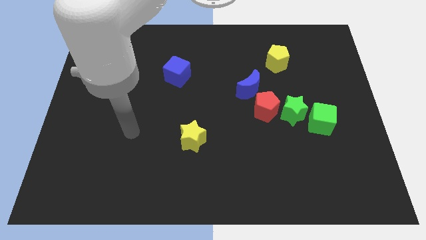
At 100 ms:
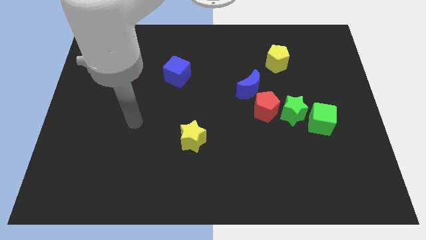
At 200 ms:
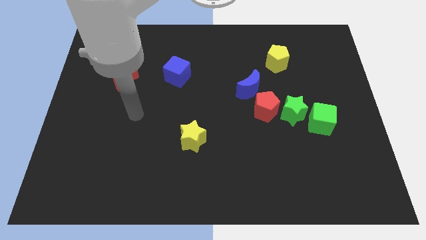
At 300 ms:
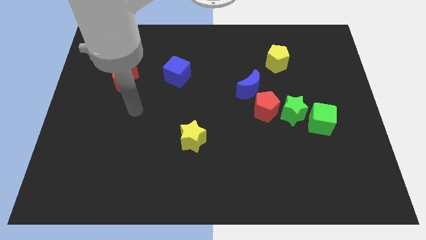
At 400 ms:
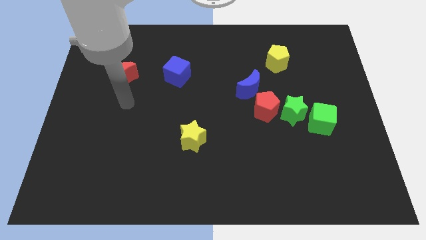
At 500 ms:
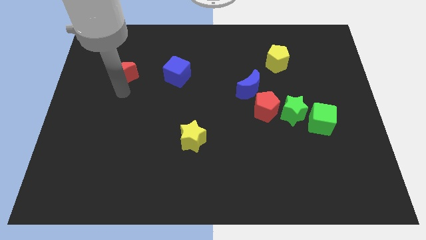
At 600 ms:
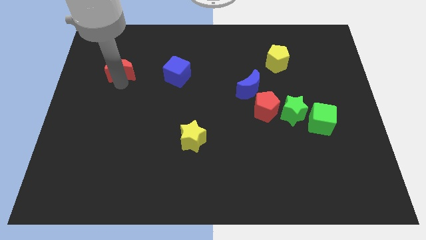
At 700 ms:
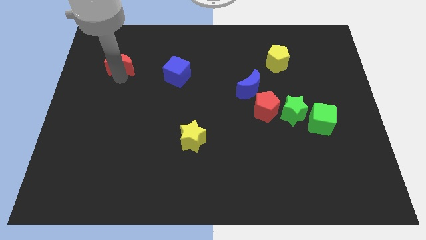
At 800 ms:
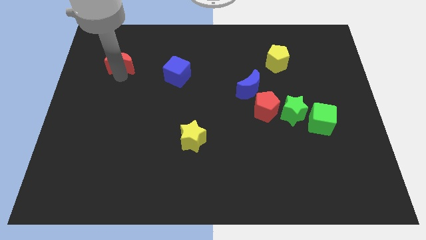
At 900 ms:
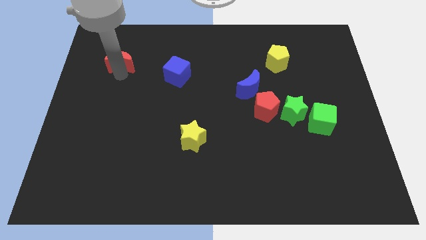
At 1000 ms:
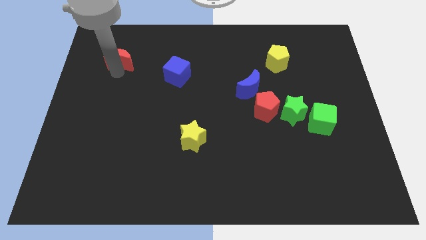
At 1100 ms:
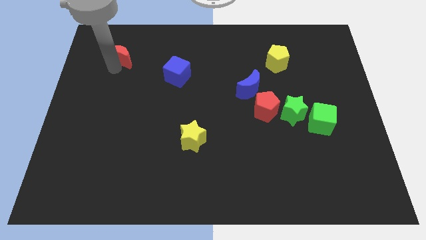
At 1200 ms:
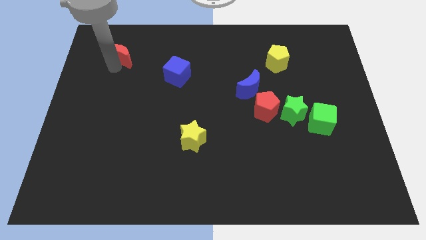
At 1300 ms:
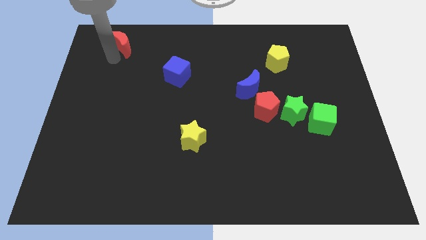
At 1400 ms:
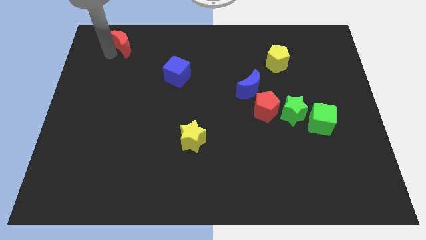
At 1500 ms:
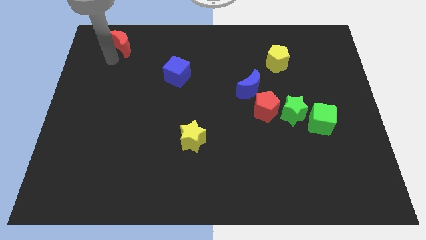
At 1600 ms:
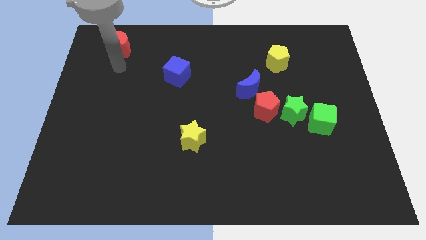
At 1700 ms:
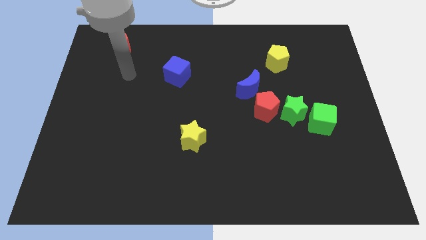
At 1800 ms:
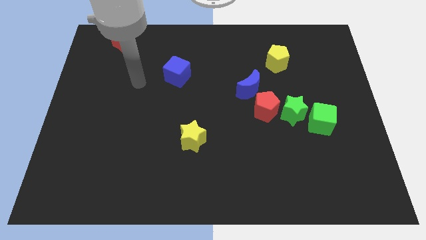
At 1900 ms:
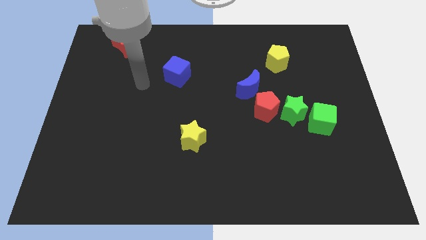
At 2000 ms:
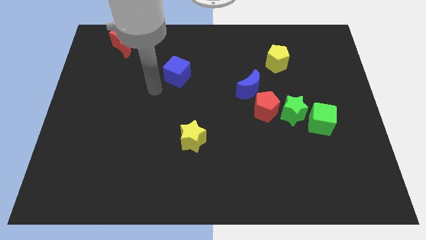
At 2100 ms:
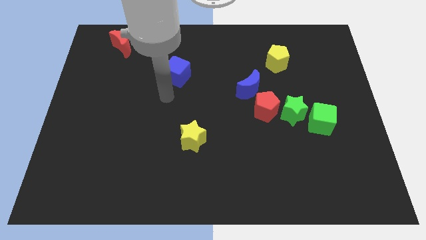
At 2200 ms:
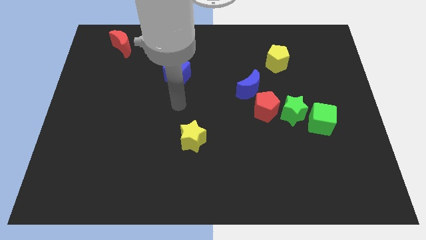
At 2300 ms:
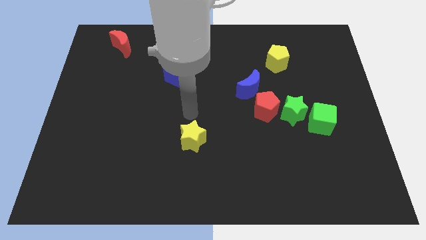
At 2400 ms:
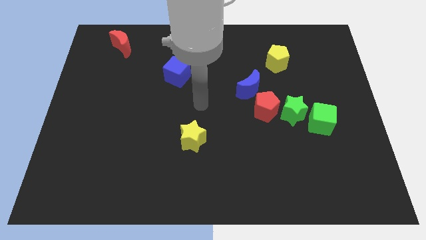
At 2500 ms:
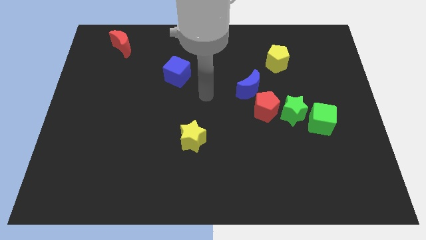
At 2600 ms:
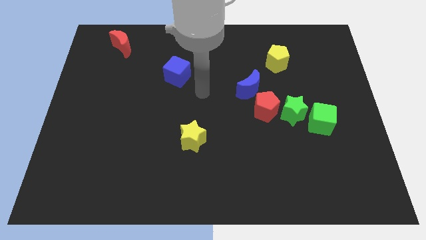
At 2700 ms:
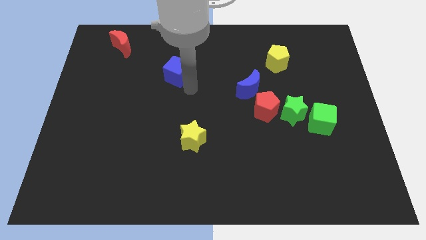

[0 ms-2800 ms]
push the red moon upward

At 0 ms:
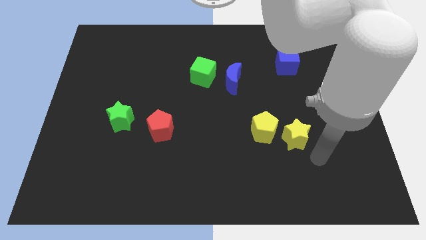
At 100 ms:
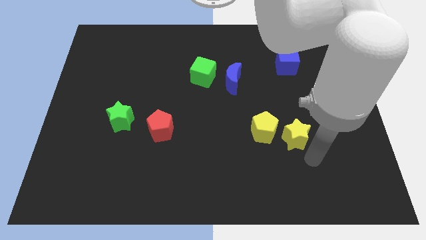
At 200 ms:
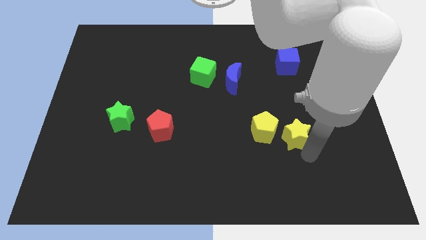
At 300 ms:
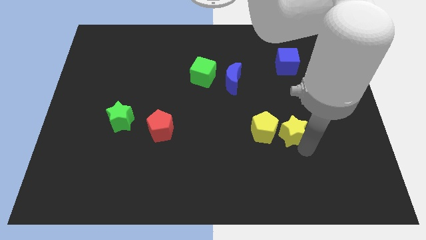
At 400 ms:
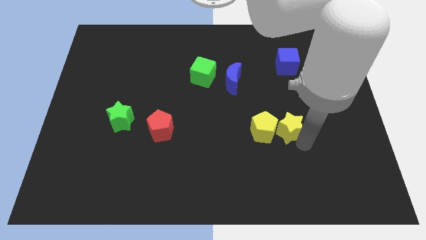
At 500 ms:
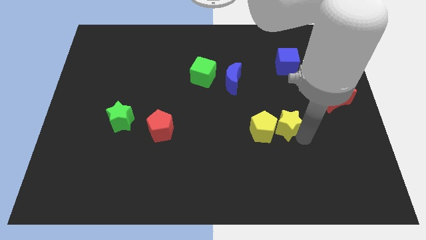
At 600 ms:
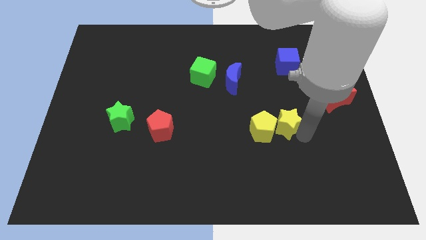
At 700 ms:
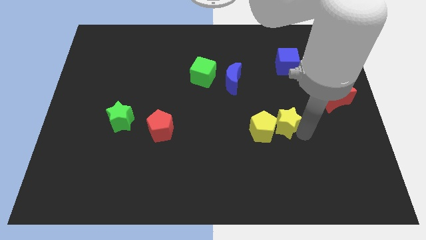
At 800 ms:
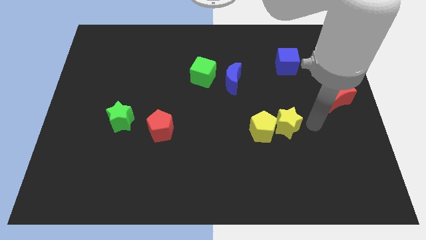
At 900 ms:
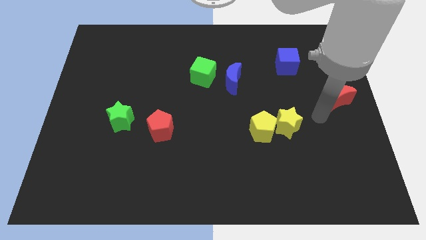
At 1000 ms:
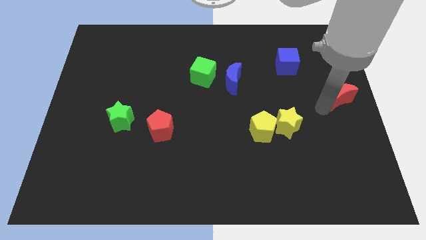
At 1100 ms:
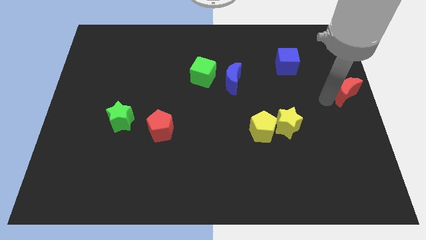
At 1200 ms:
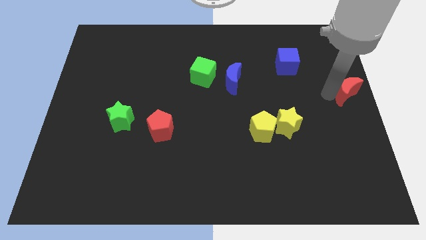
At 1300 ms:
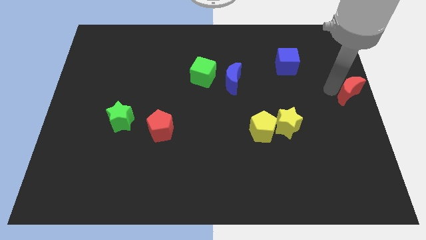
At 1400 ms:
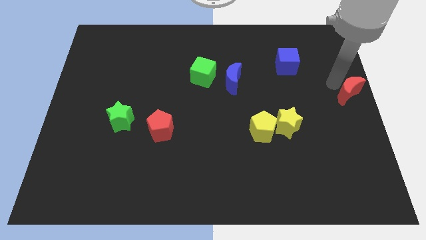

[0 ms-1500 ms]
slightly move the red moon up

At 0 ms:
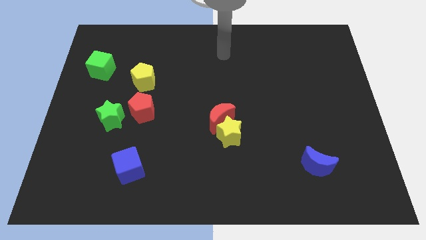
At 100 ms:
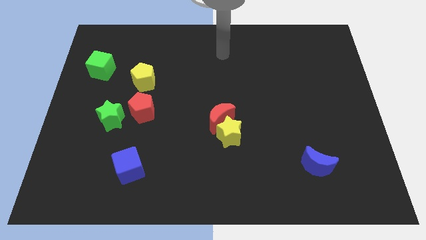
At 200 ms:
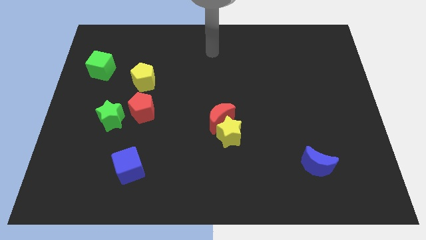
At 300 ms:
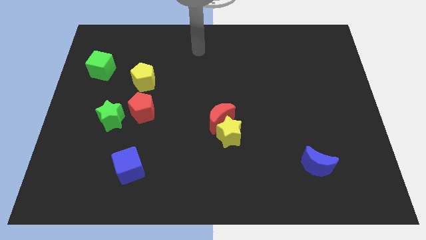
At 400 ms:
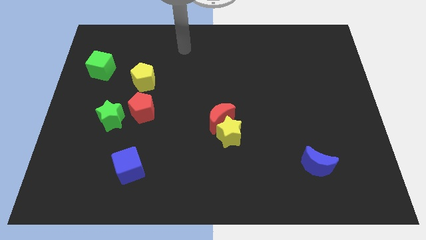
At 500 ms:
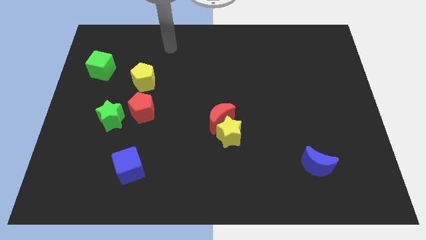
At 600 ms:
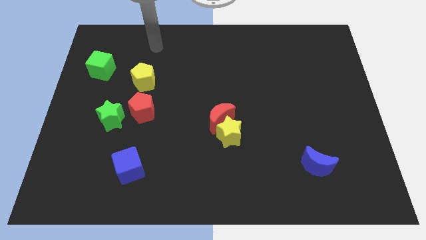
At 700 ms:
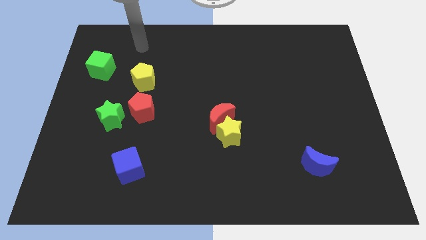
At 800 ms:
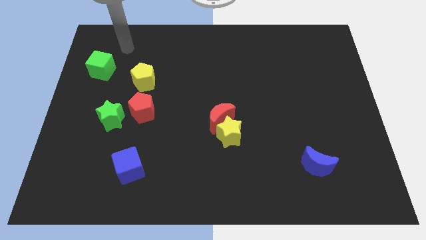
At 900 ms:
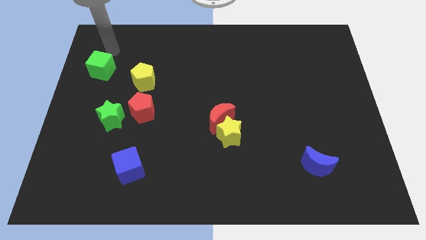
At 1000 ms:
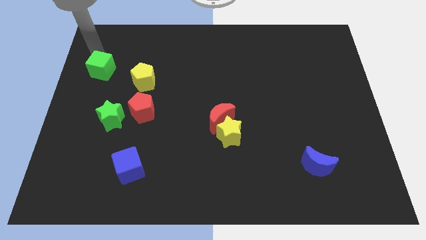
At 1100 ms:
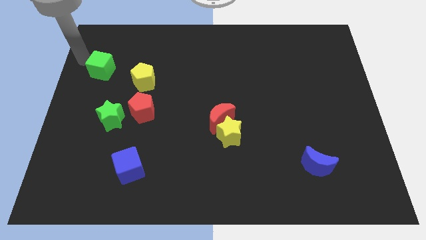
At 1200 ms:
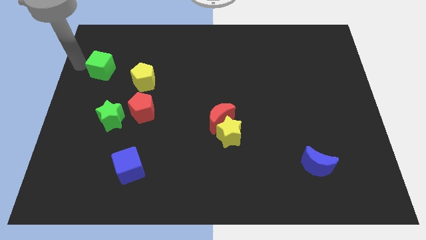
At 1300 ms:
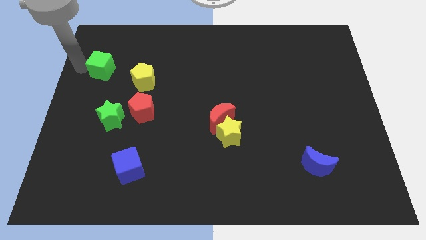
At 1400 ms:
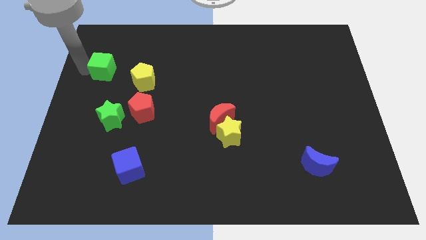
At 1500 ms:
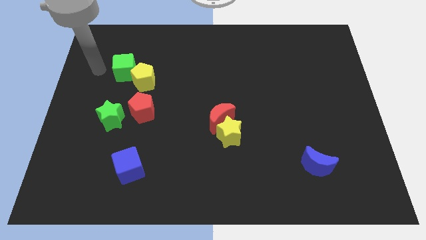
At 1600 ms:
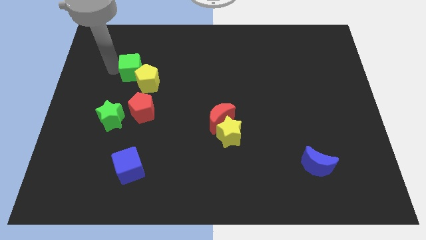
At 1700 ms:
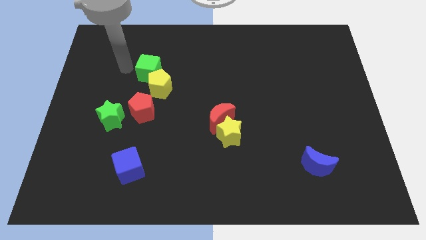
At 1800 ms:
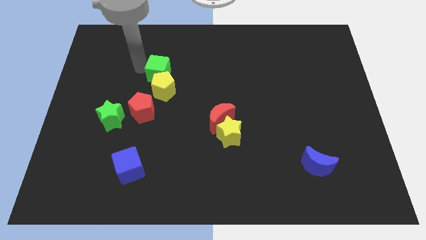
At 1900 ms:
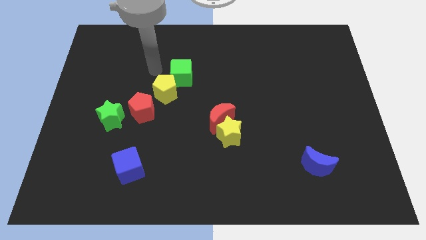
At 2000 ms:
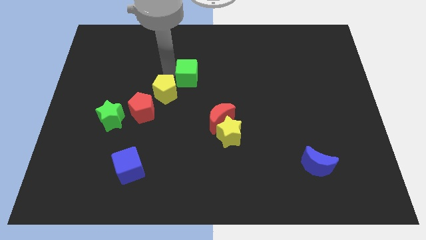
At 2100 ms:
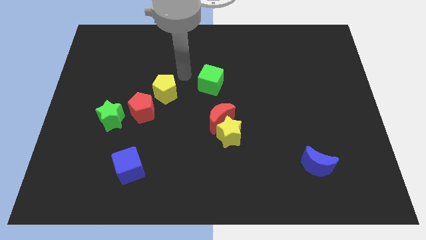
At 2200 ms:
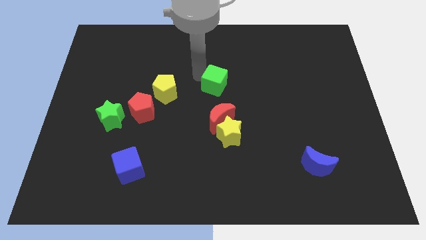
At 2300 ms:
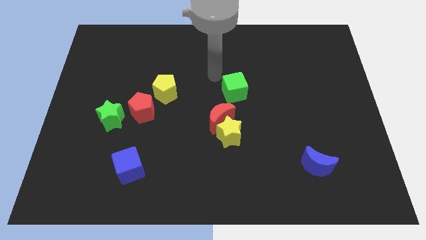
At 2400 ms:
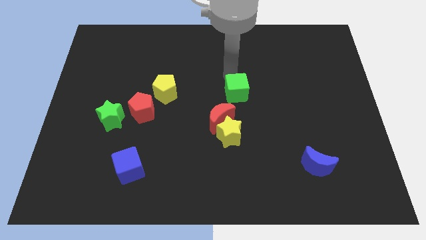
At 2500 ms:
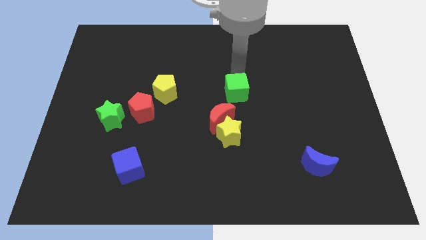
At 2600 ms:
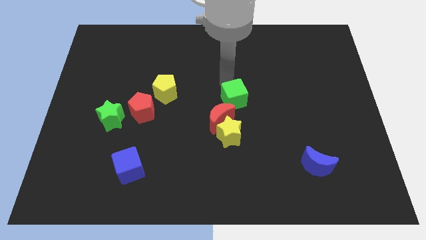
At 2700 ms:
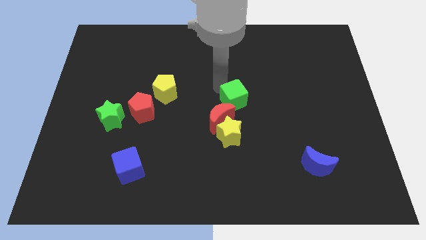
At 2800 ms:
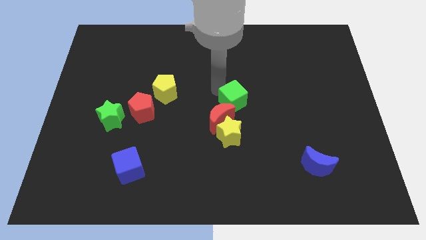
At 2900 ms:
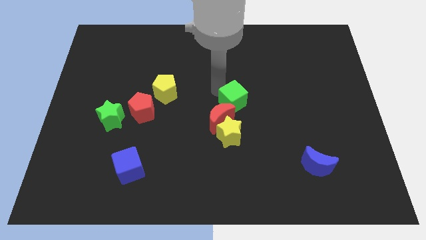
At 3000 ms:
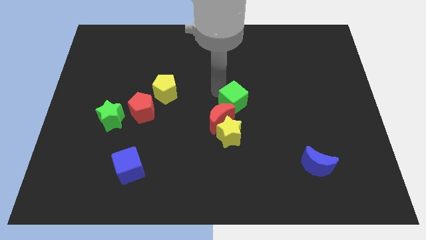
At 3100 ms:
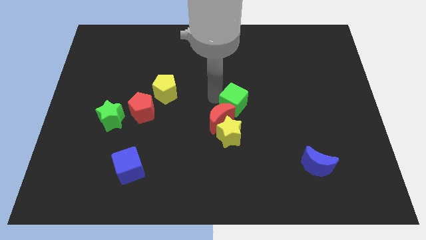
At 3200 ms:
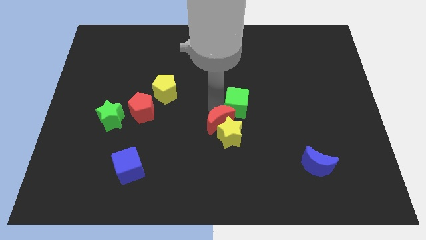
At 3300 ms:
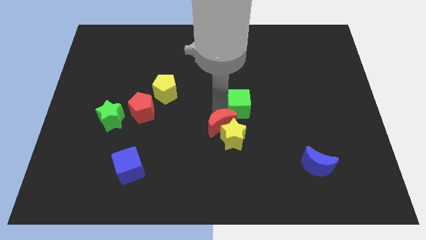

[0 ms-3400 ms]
push the green cube into red moon

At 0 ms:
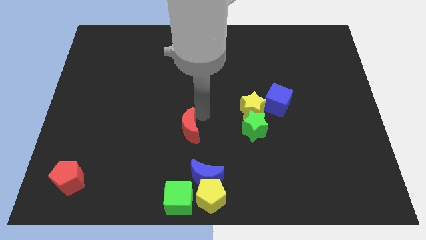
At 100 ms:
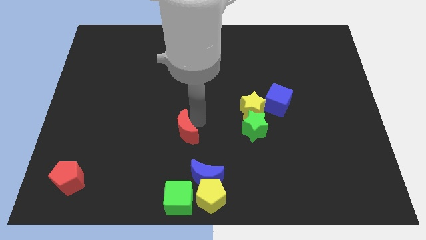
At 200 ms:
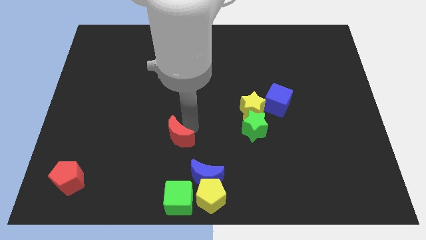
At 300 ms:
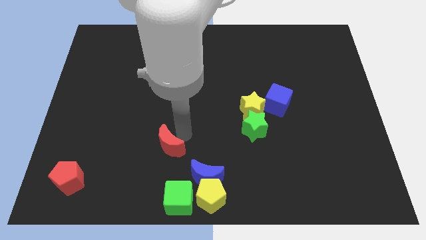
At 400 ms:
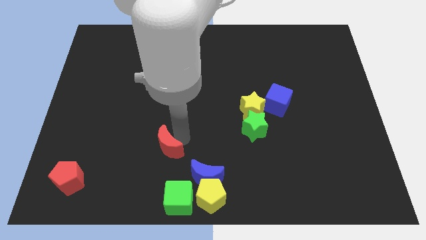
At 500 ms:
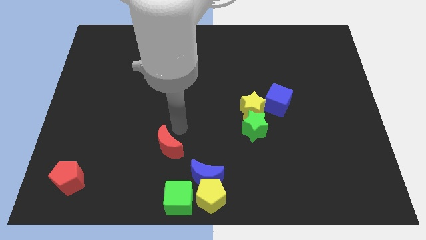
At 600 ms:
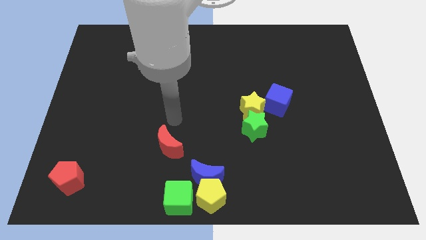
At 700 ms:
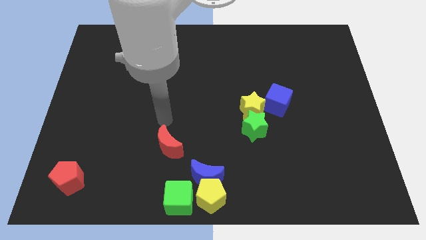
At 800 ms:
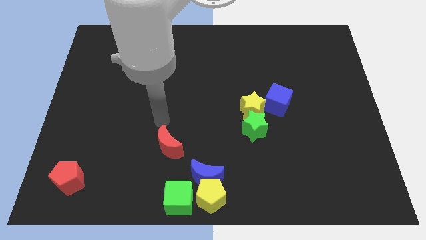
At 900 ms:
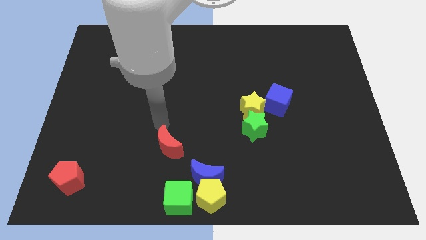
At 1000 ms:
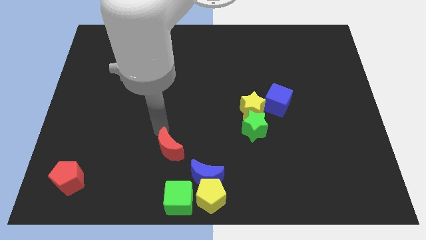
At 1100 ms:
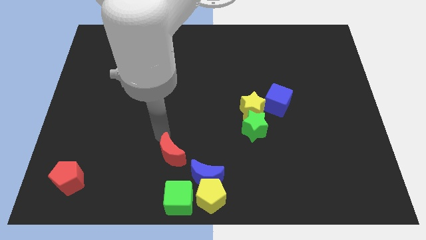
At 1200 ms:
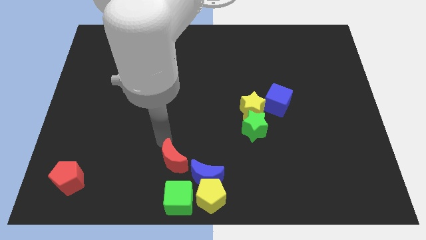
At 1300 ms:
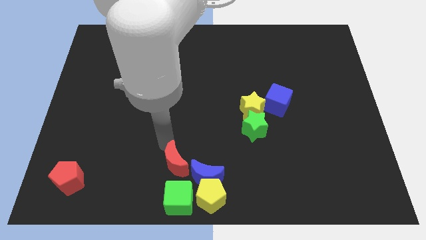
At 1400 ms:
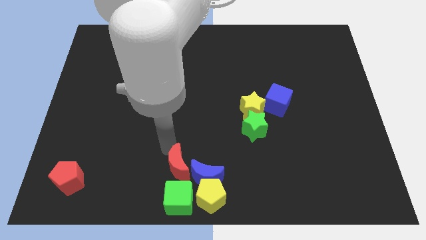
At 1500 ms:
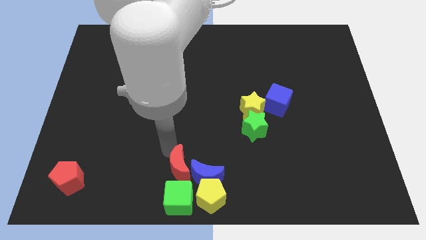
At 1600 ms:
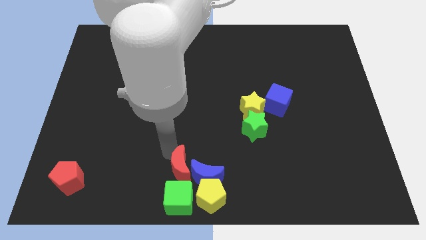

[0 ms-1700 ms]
place red crescent above green cube
